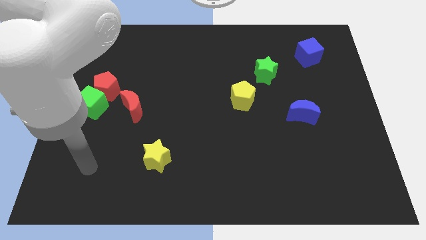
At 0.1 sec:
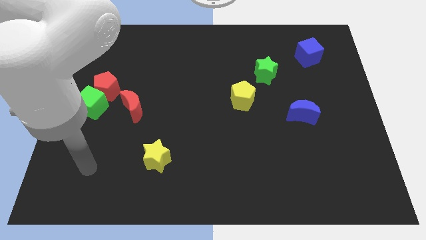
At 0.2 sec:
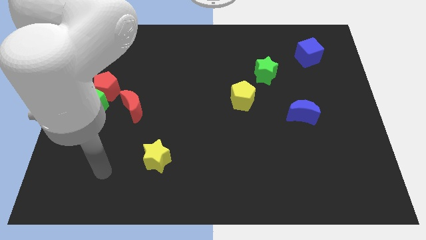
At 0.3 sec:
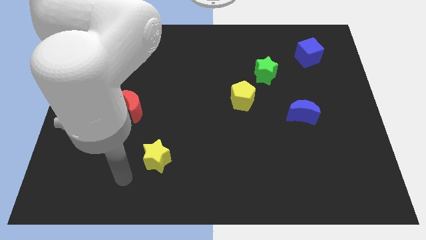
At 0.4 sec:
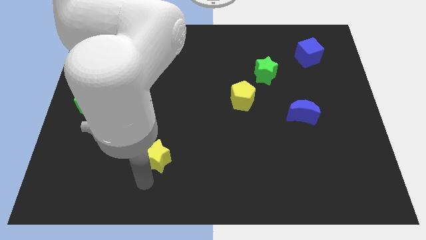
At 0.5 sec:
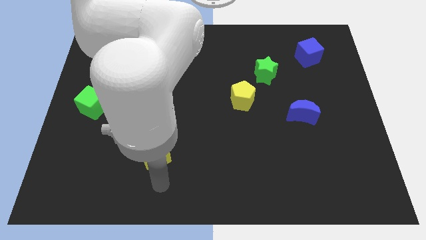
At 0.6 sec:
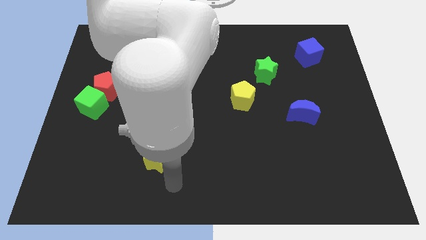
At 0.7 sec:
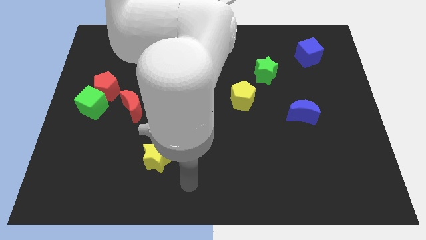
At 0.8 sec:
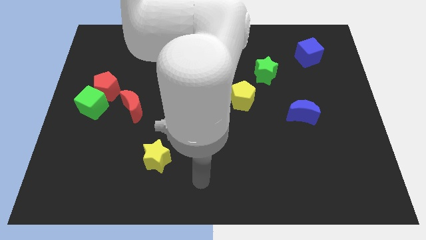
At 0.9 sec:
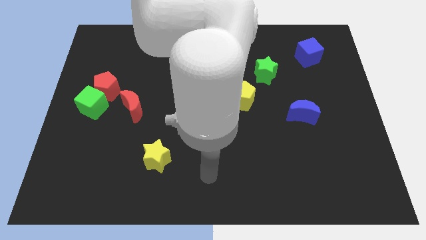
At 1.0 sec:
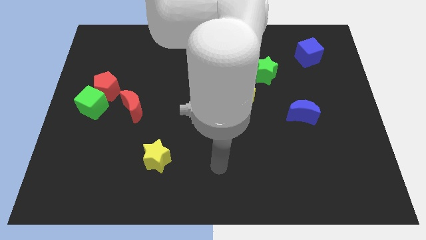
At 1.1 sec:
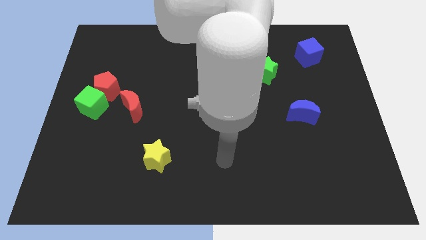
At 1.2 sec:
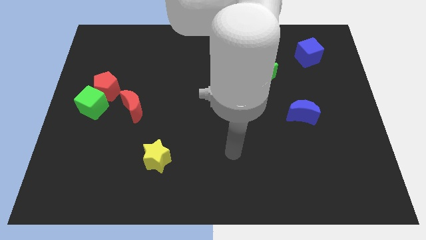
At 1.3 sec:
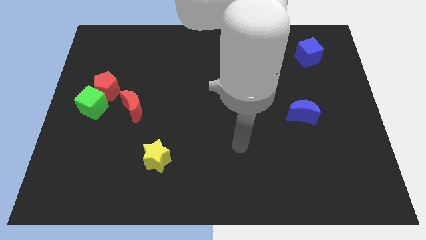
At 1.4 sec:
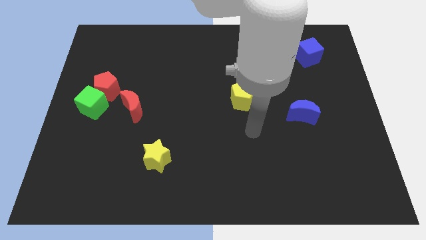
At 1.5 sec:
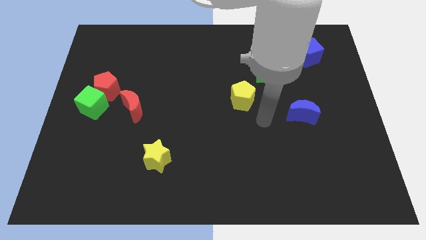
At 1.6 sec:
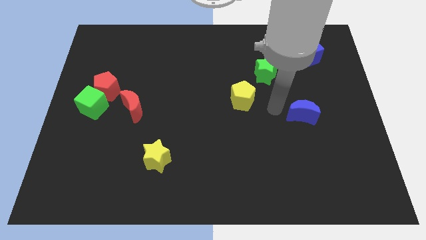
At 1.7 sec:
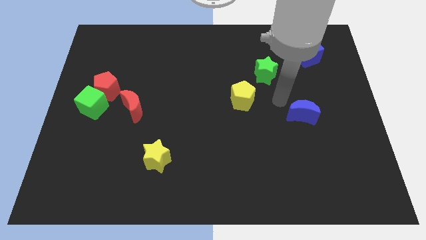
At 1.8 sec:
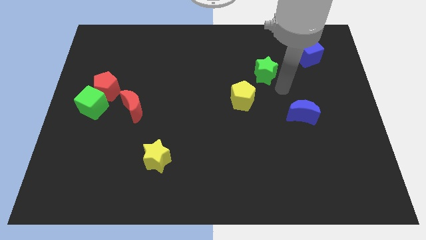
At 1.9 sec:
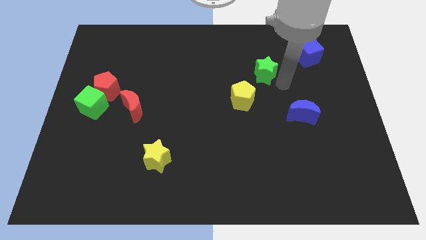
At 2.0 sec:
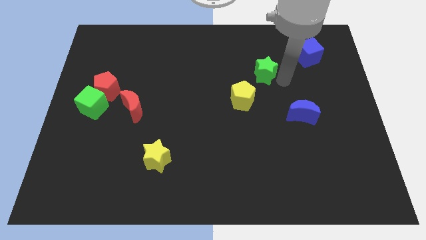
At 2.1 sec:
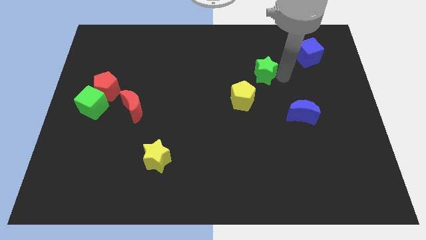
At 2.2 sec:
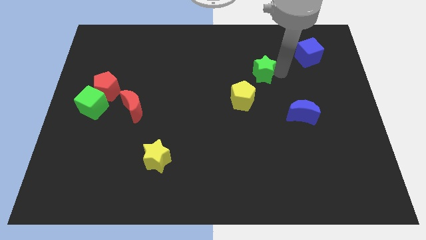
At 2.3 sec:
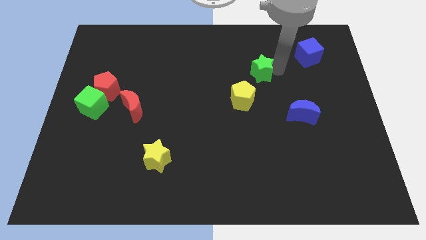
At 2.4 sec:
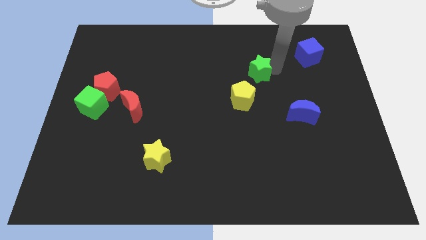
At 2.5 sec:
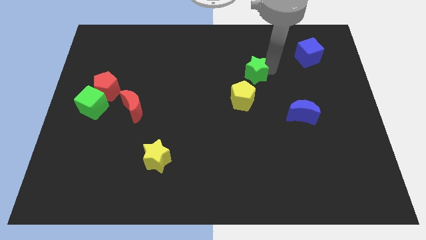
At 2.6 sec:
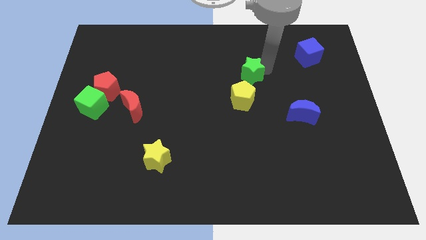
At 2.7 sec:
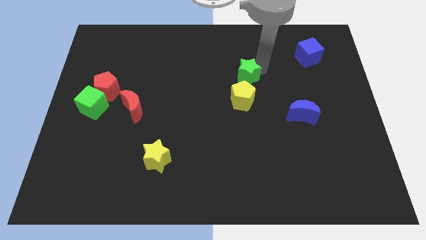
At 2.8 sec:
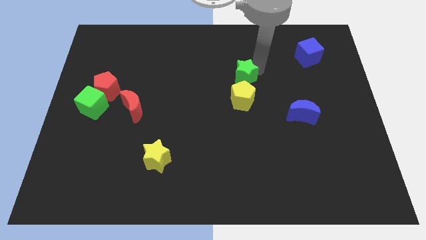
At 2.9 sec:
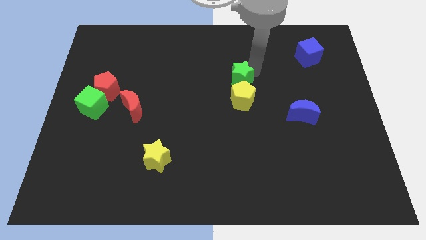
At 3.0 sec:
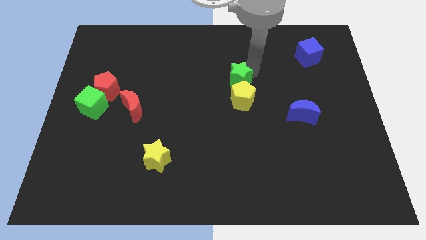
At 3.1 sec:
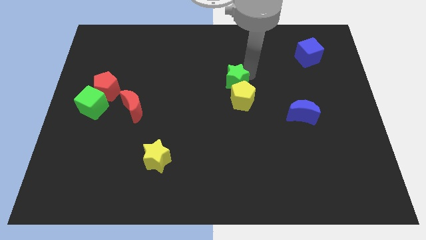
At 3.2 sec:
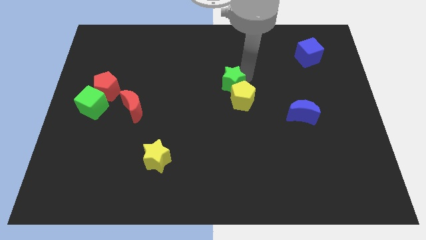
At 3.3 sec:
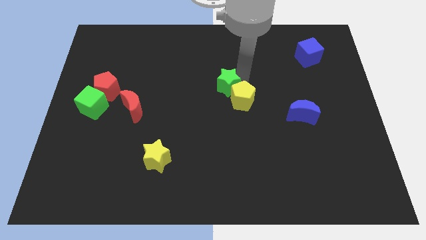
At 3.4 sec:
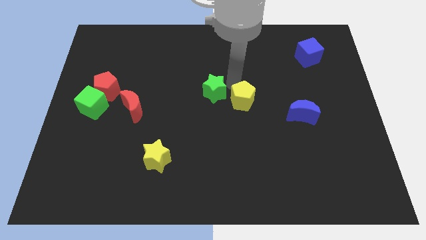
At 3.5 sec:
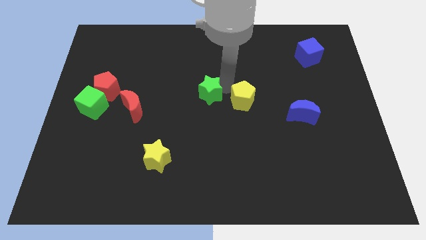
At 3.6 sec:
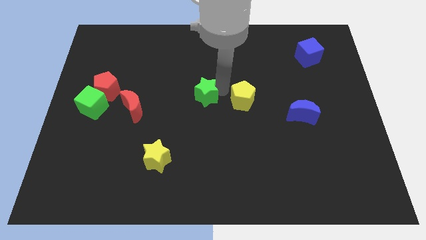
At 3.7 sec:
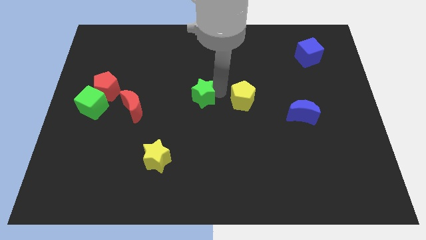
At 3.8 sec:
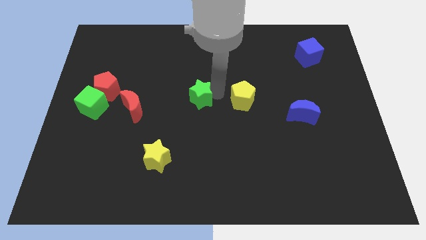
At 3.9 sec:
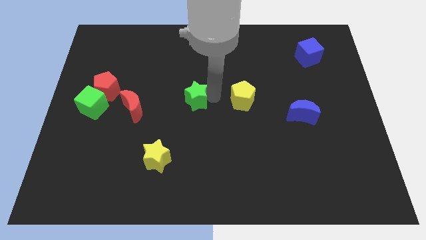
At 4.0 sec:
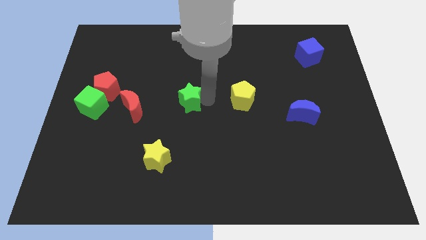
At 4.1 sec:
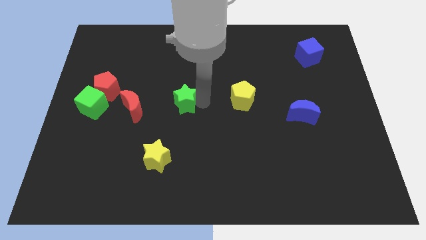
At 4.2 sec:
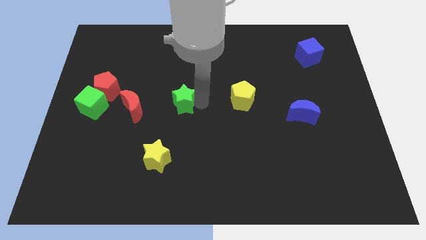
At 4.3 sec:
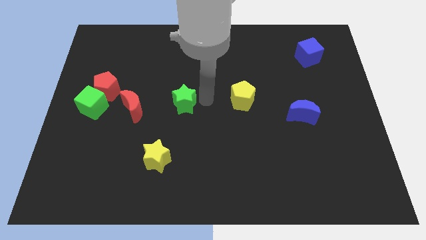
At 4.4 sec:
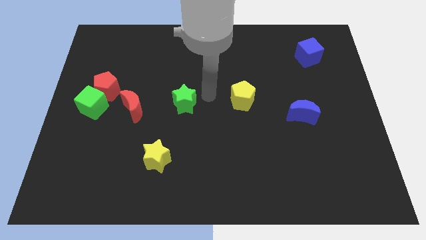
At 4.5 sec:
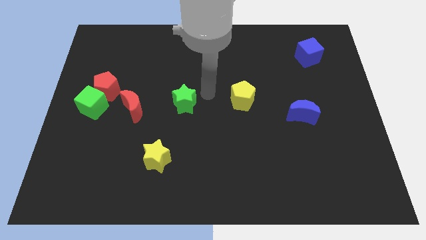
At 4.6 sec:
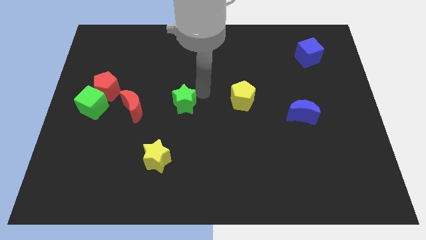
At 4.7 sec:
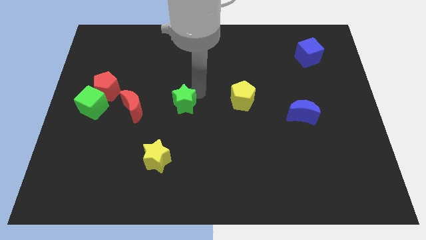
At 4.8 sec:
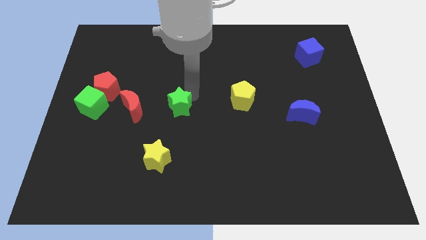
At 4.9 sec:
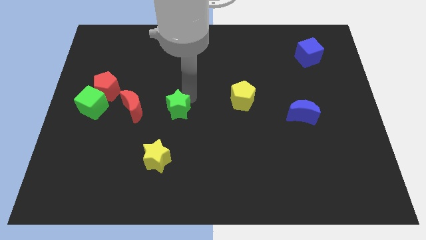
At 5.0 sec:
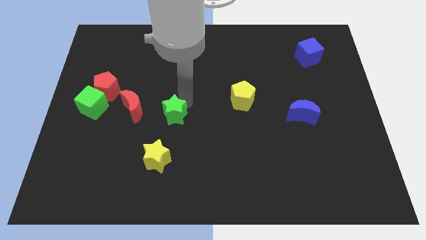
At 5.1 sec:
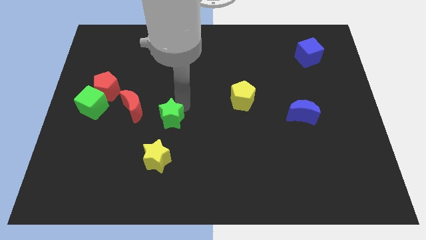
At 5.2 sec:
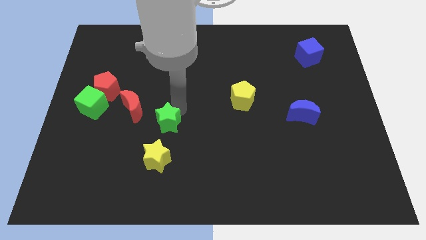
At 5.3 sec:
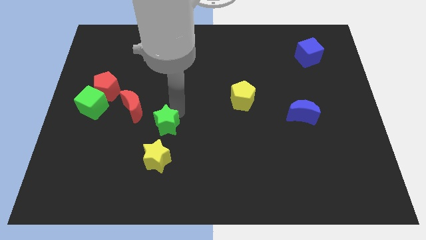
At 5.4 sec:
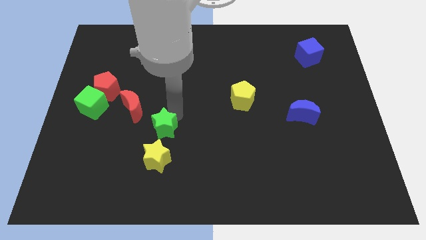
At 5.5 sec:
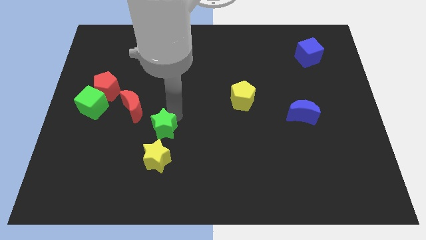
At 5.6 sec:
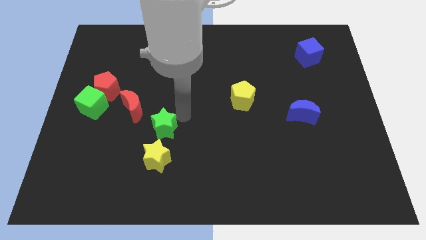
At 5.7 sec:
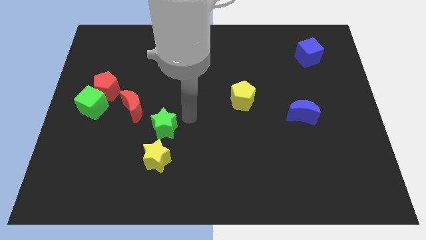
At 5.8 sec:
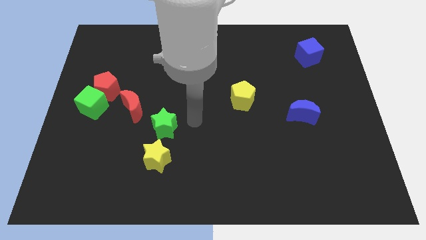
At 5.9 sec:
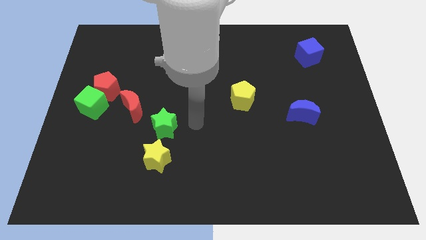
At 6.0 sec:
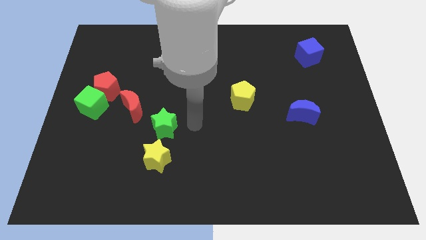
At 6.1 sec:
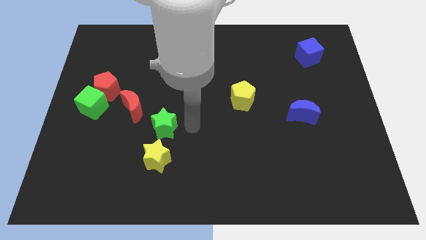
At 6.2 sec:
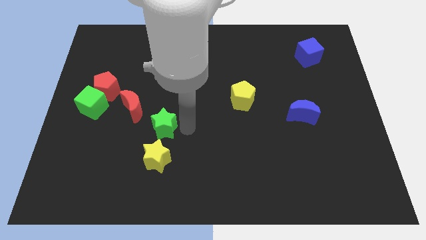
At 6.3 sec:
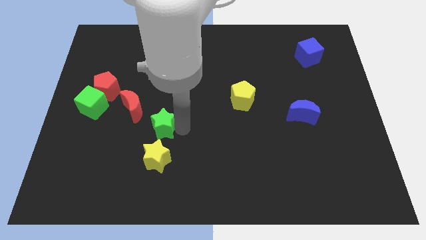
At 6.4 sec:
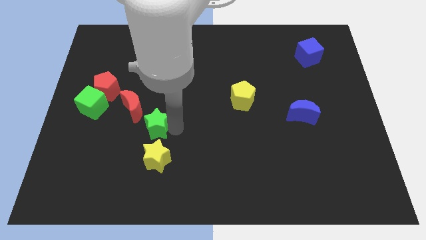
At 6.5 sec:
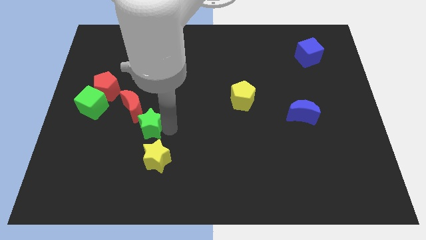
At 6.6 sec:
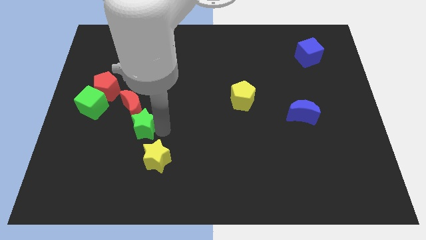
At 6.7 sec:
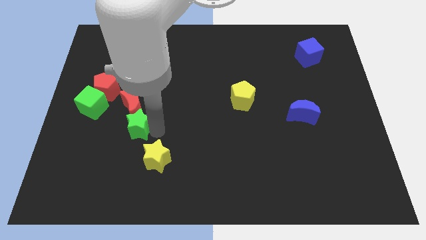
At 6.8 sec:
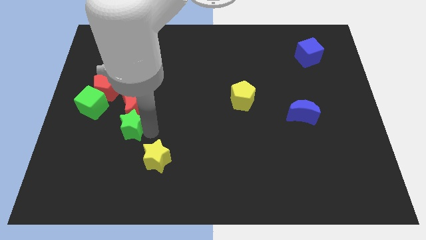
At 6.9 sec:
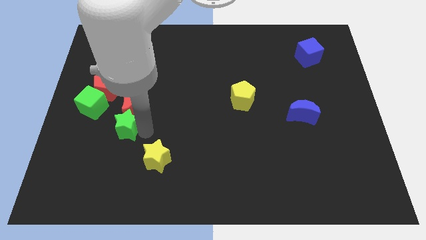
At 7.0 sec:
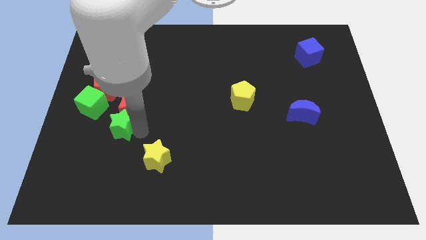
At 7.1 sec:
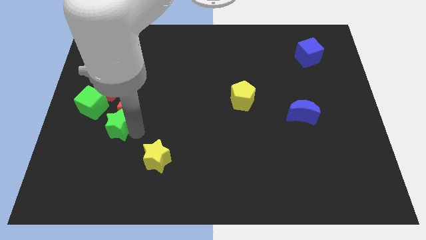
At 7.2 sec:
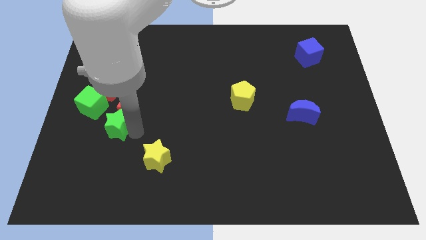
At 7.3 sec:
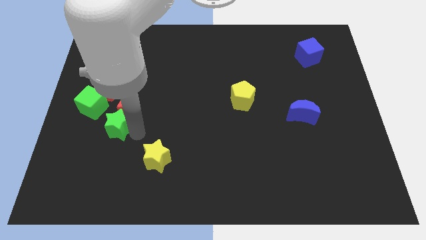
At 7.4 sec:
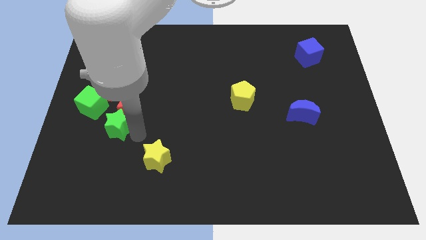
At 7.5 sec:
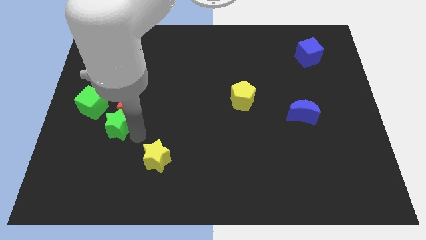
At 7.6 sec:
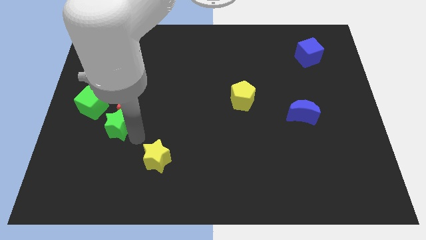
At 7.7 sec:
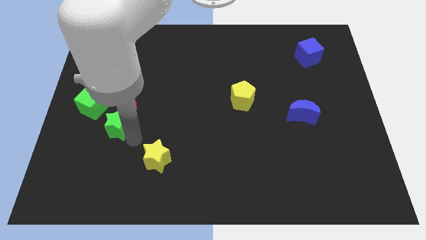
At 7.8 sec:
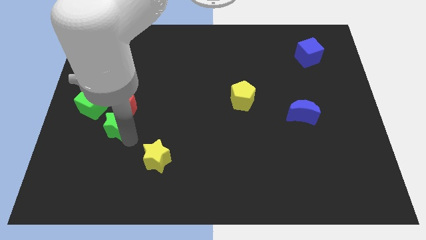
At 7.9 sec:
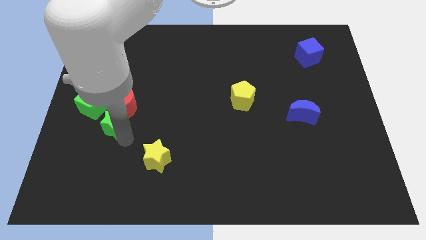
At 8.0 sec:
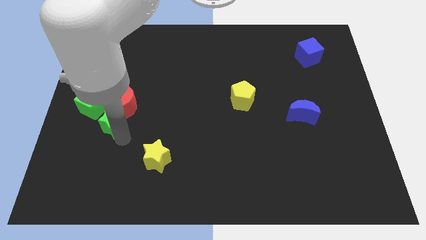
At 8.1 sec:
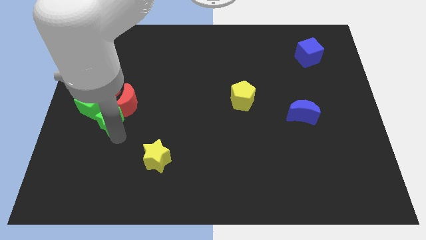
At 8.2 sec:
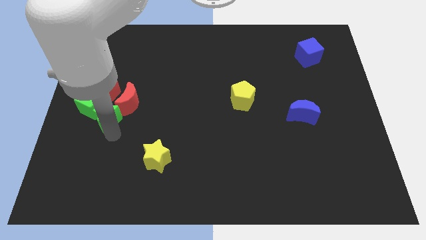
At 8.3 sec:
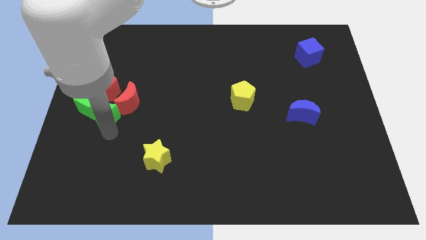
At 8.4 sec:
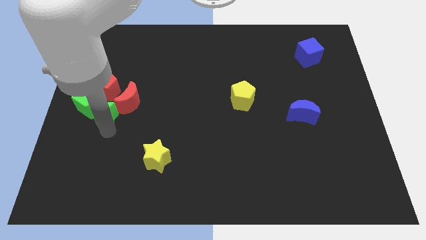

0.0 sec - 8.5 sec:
put the green star close to the green cube
